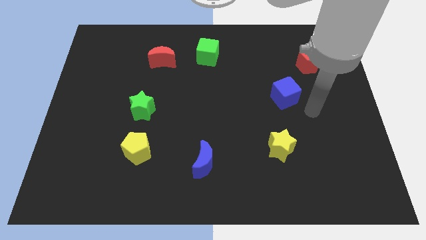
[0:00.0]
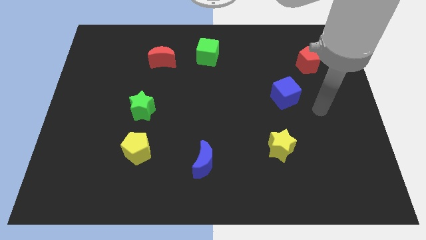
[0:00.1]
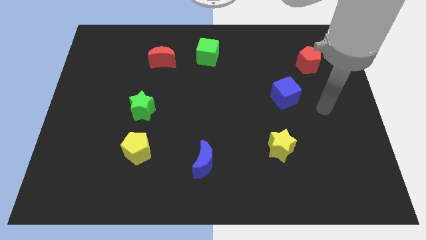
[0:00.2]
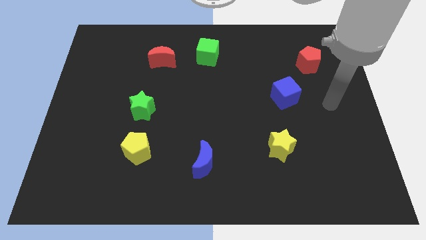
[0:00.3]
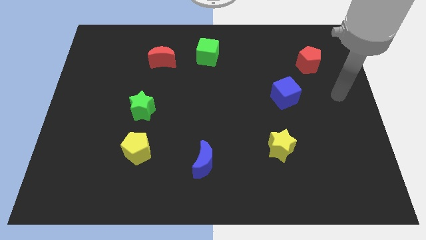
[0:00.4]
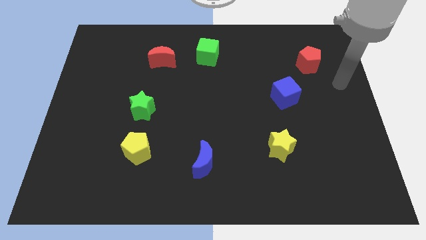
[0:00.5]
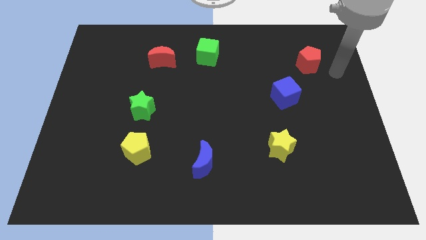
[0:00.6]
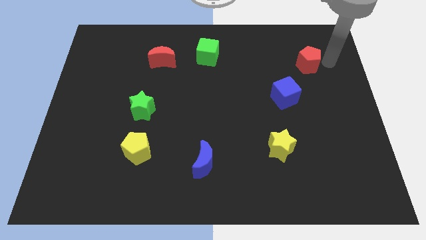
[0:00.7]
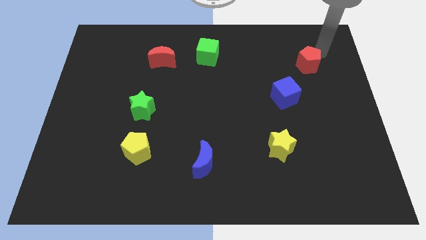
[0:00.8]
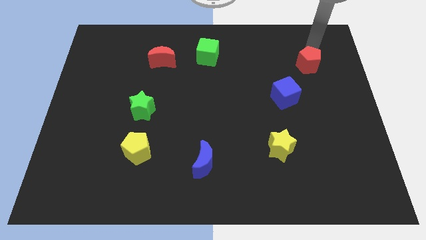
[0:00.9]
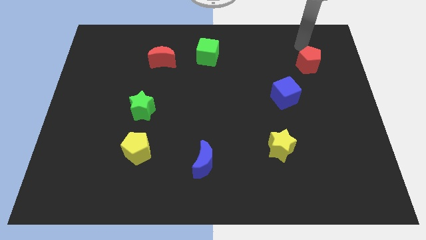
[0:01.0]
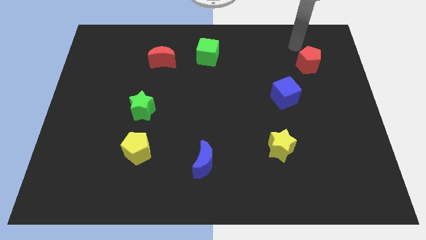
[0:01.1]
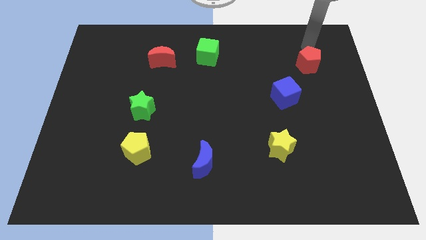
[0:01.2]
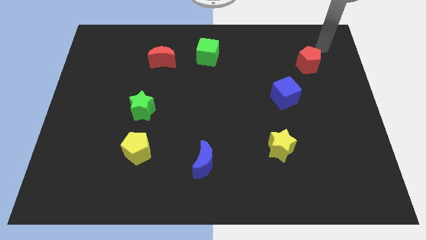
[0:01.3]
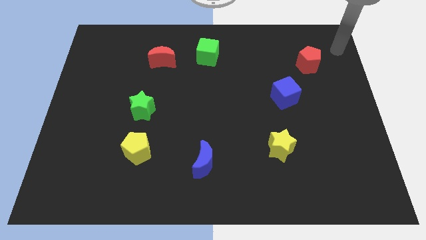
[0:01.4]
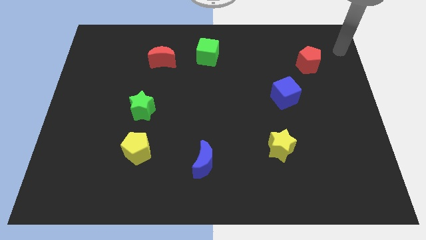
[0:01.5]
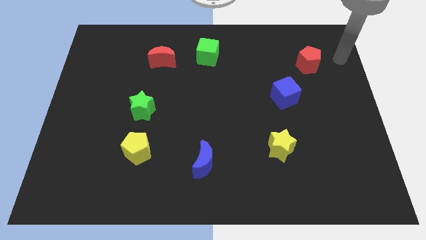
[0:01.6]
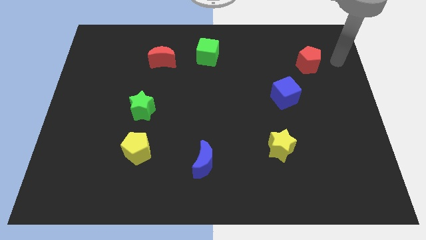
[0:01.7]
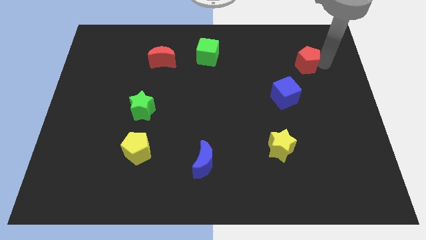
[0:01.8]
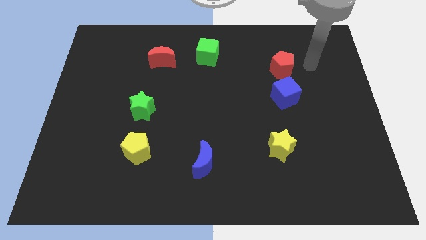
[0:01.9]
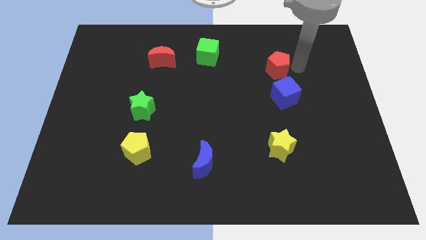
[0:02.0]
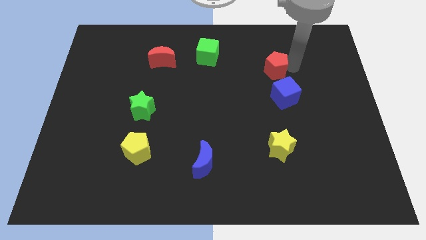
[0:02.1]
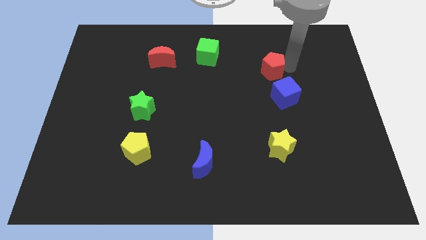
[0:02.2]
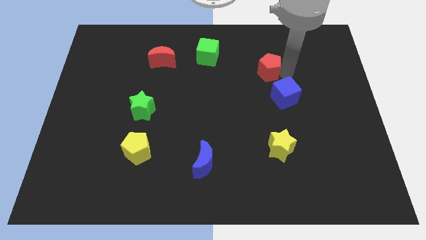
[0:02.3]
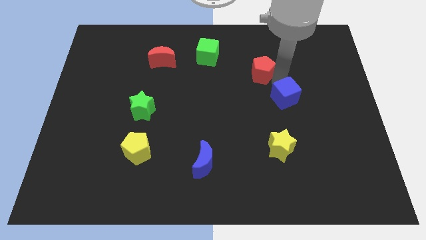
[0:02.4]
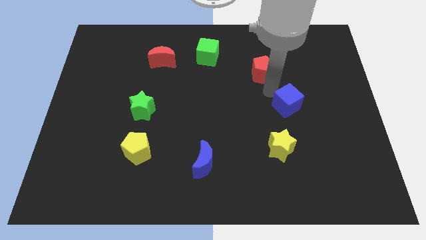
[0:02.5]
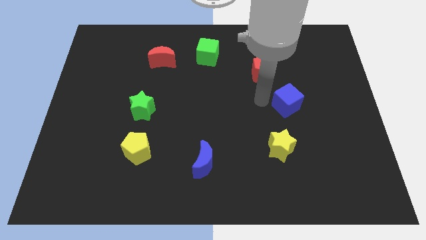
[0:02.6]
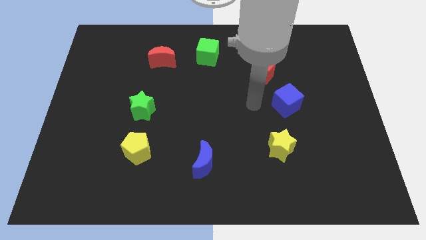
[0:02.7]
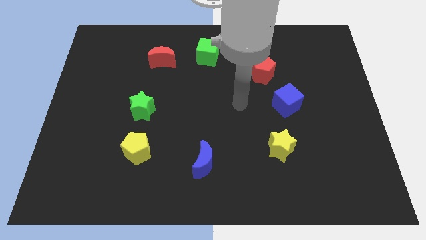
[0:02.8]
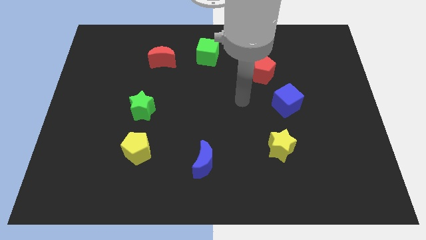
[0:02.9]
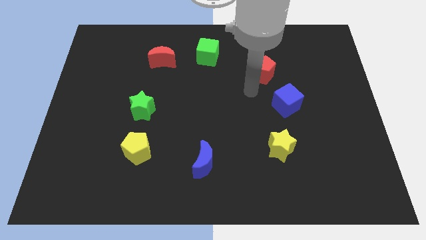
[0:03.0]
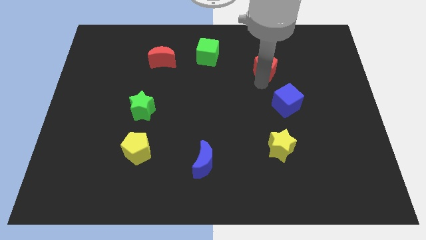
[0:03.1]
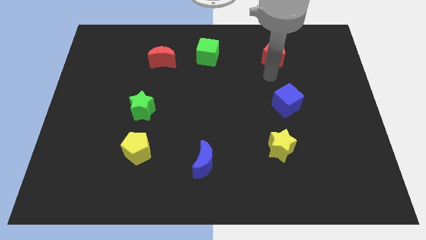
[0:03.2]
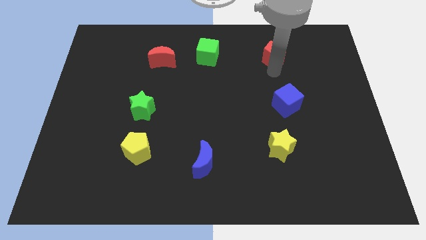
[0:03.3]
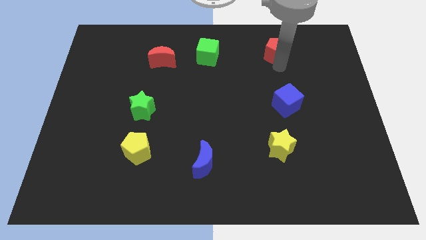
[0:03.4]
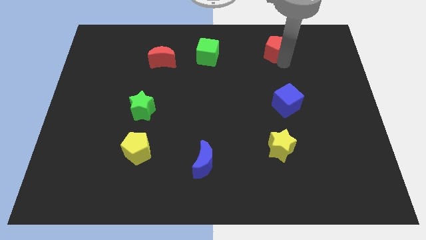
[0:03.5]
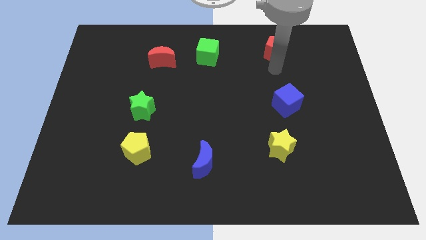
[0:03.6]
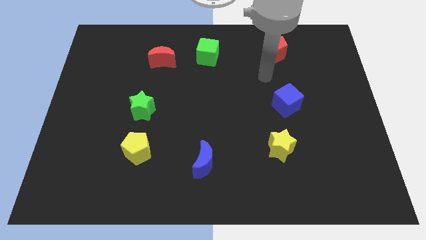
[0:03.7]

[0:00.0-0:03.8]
move the red pentagon above the blue cube

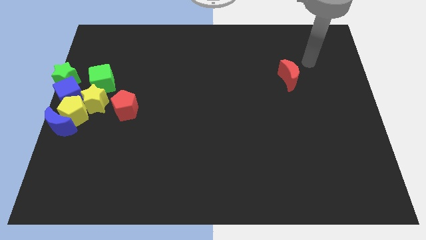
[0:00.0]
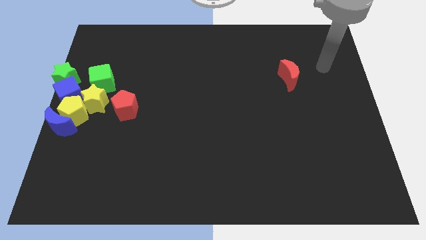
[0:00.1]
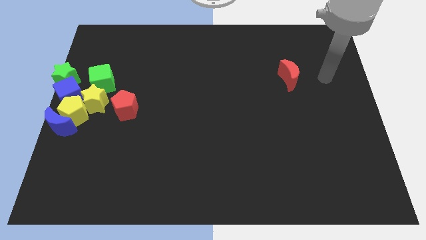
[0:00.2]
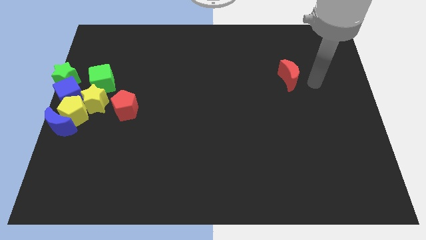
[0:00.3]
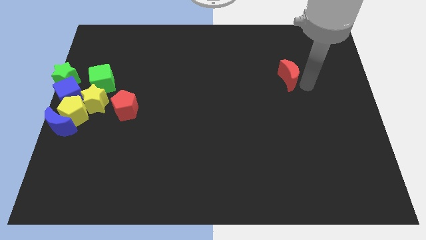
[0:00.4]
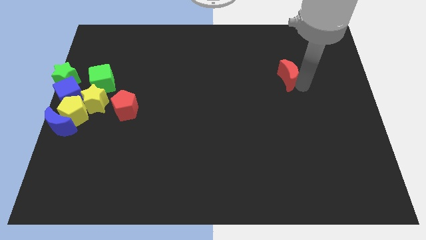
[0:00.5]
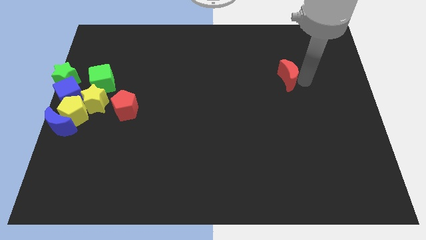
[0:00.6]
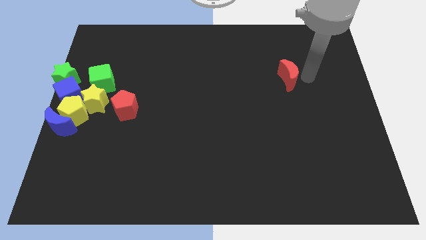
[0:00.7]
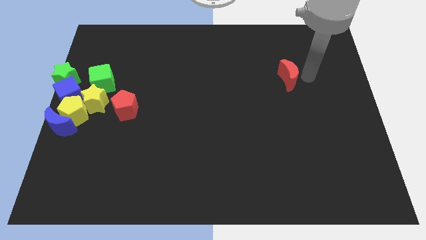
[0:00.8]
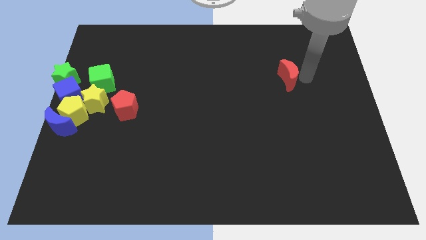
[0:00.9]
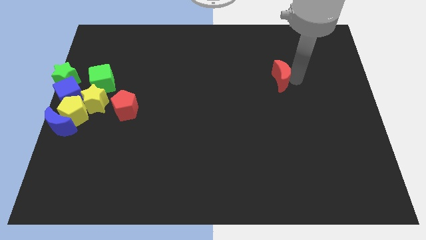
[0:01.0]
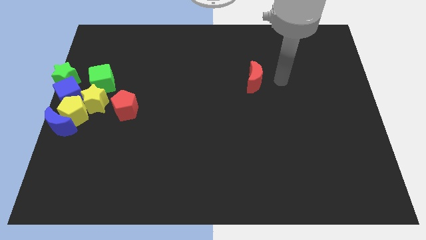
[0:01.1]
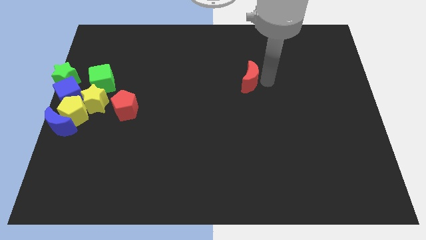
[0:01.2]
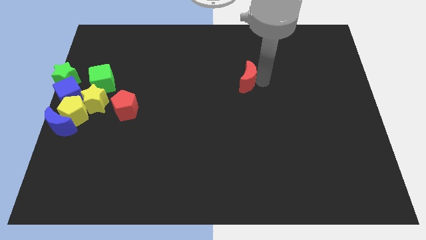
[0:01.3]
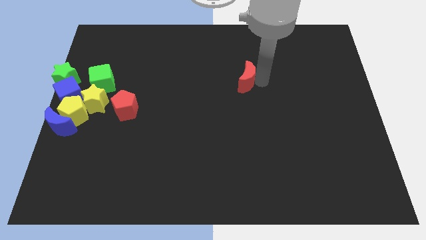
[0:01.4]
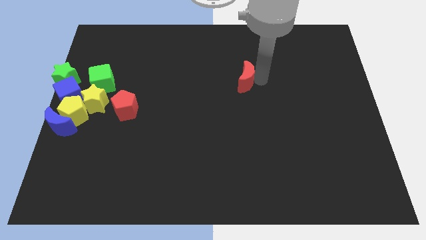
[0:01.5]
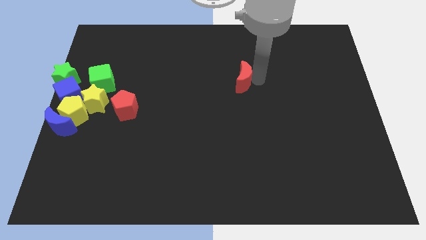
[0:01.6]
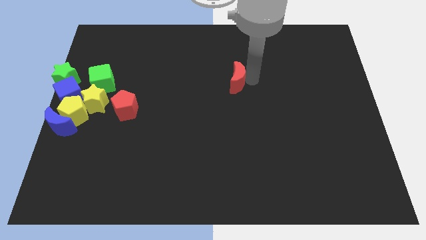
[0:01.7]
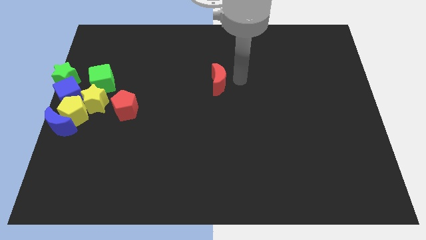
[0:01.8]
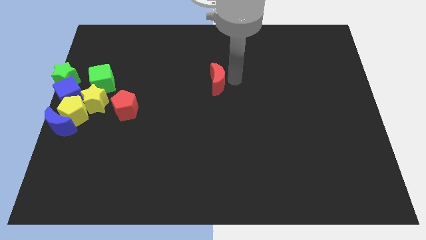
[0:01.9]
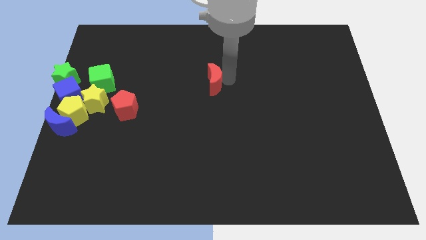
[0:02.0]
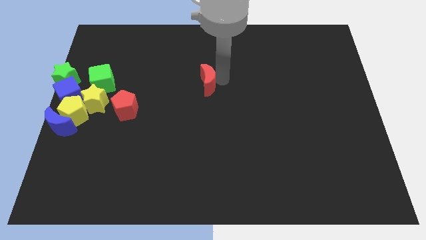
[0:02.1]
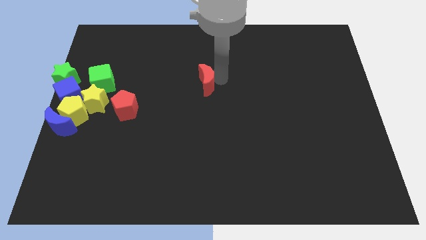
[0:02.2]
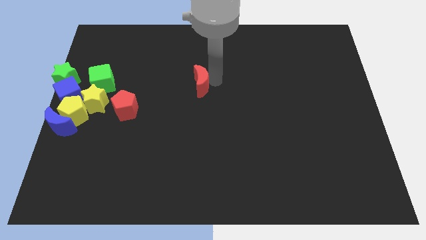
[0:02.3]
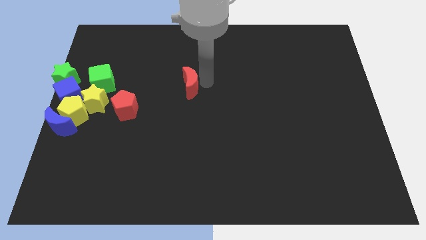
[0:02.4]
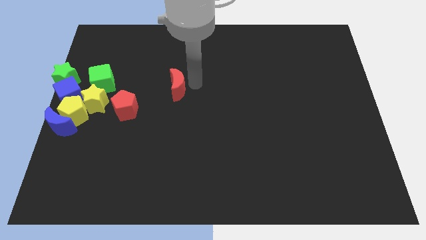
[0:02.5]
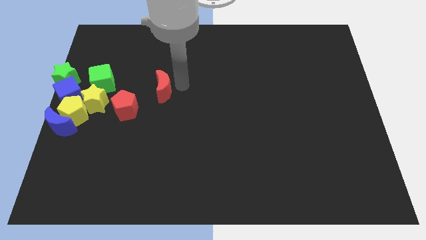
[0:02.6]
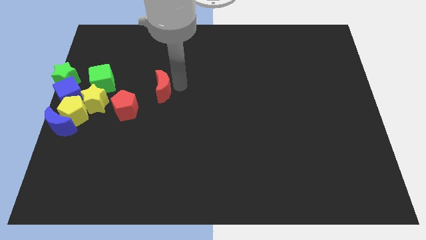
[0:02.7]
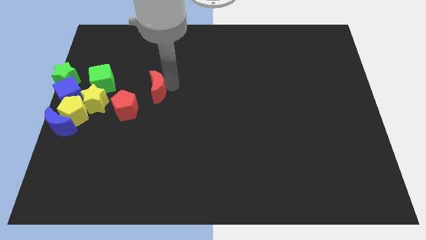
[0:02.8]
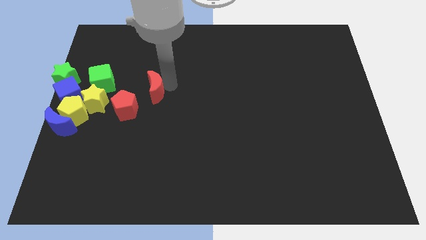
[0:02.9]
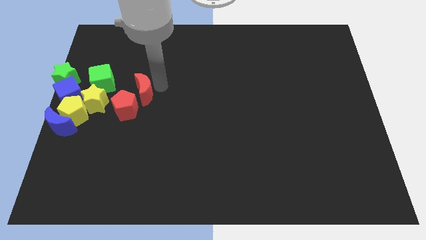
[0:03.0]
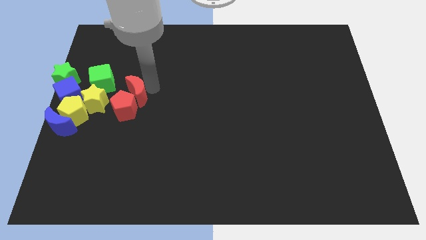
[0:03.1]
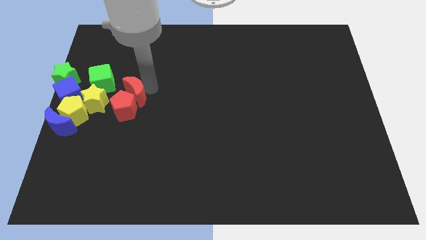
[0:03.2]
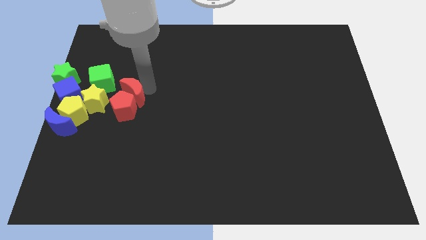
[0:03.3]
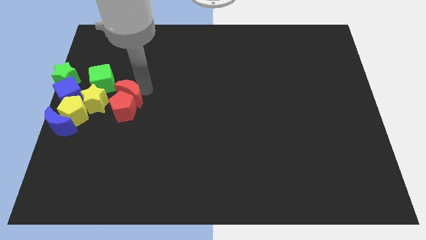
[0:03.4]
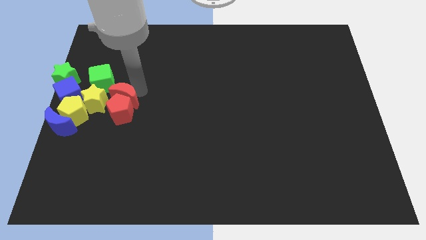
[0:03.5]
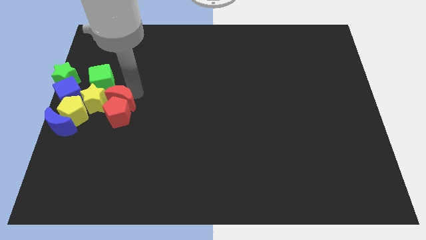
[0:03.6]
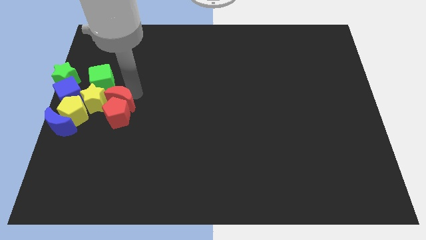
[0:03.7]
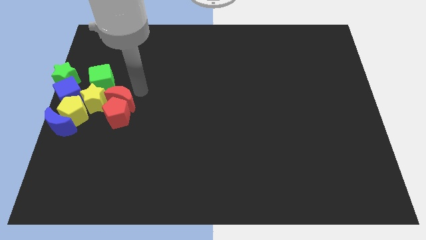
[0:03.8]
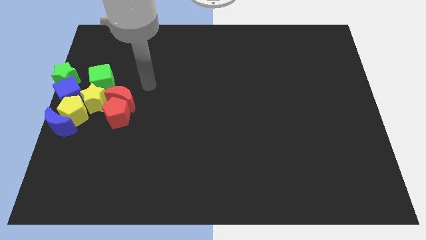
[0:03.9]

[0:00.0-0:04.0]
move the red moon into red pentagon on top

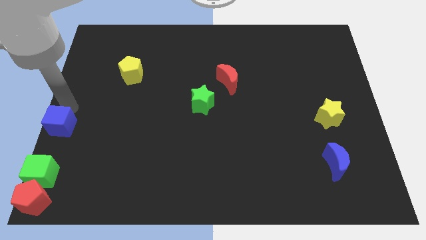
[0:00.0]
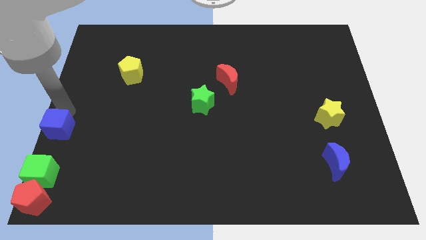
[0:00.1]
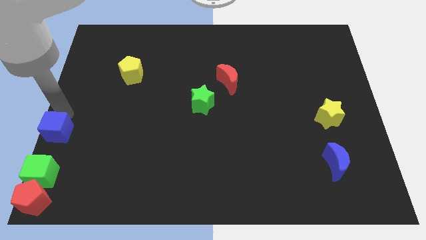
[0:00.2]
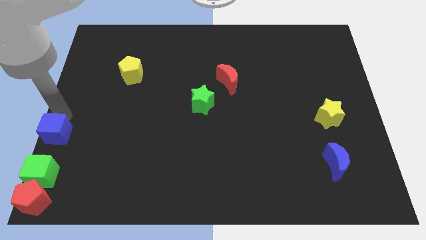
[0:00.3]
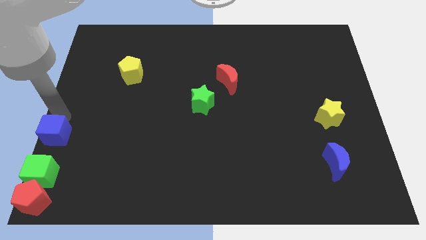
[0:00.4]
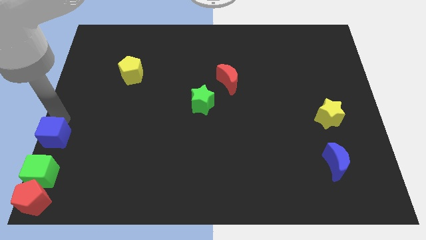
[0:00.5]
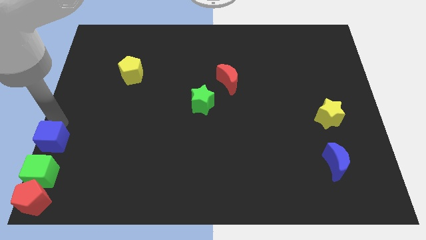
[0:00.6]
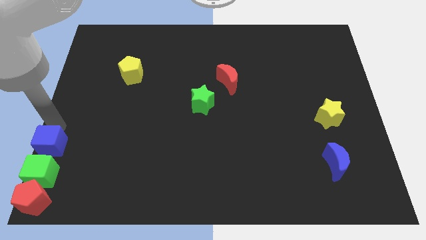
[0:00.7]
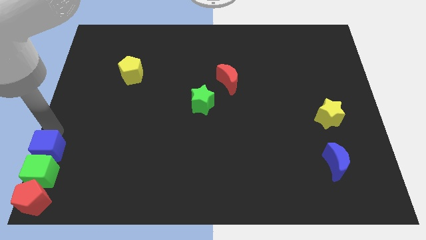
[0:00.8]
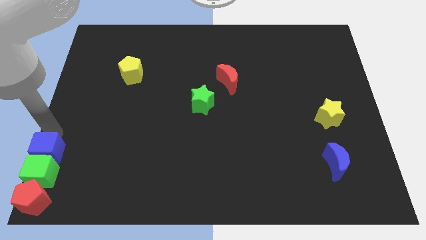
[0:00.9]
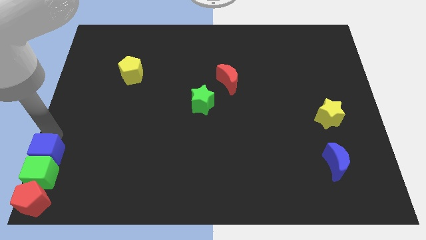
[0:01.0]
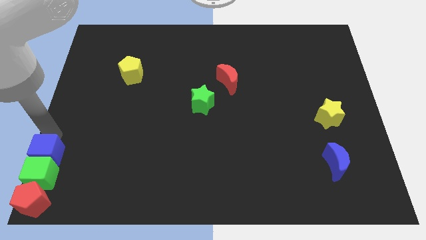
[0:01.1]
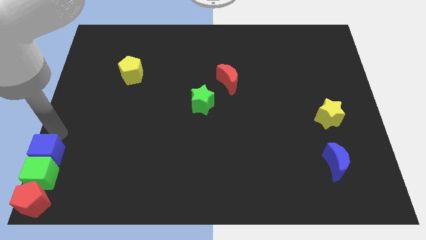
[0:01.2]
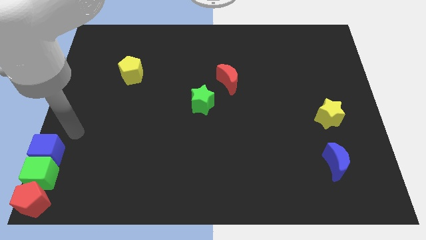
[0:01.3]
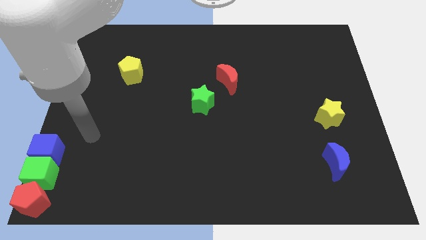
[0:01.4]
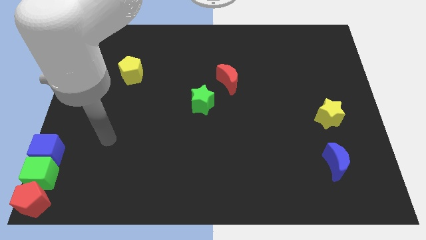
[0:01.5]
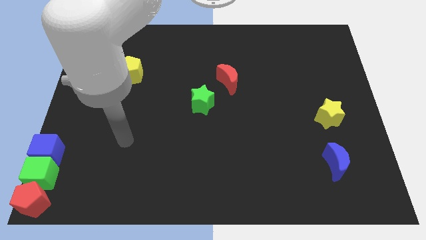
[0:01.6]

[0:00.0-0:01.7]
move the blue cube into the green cube
